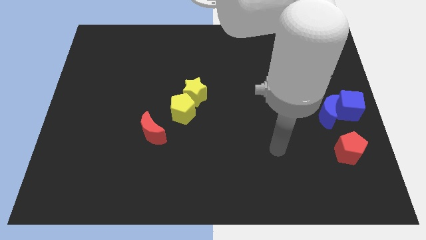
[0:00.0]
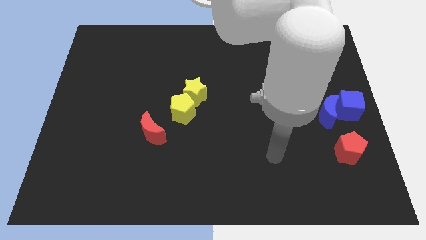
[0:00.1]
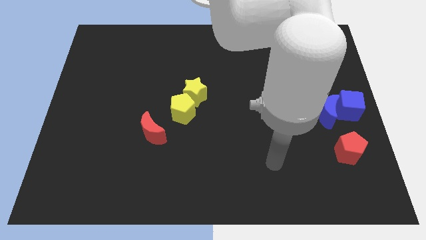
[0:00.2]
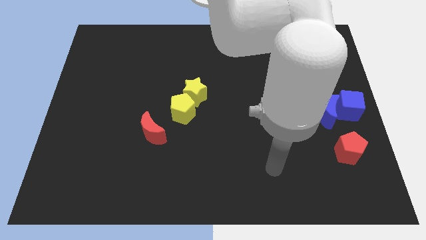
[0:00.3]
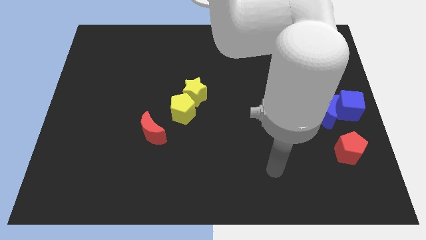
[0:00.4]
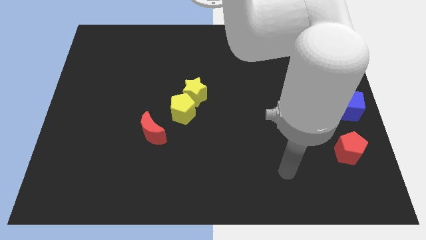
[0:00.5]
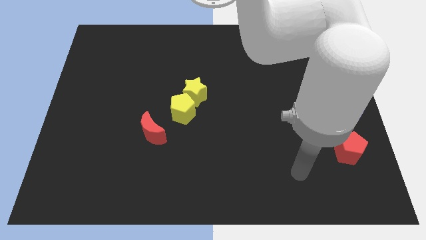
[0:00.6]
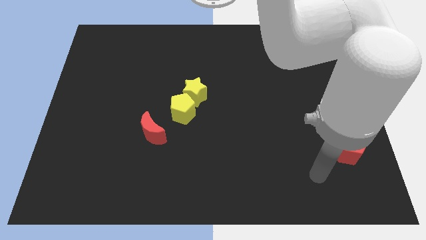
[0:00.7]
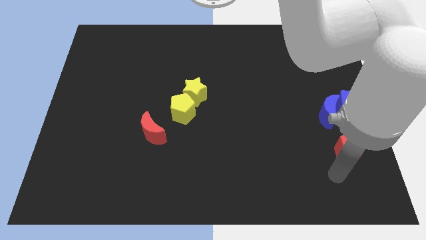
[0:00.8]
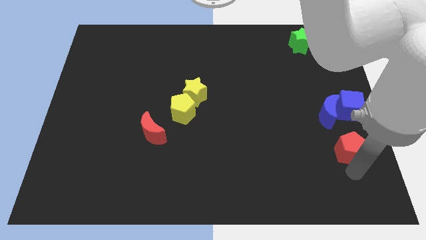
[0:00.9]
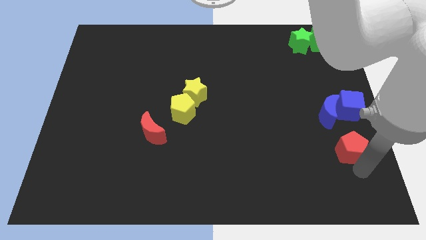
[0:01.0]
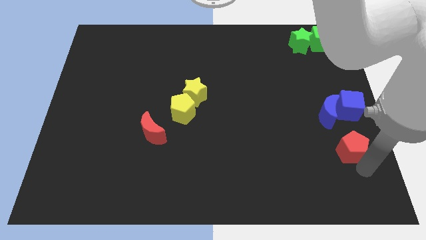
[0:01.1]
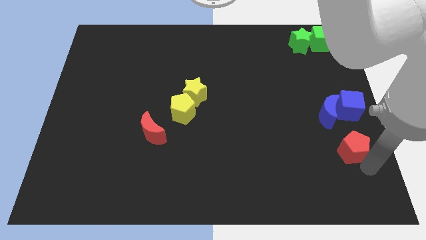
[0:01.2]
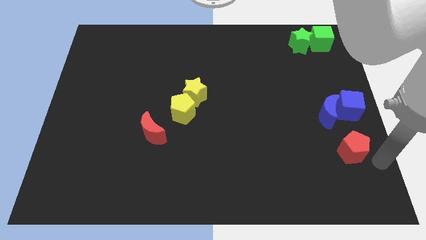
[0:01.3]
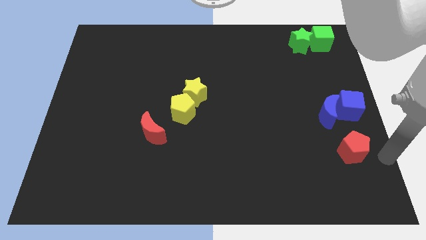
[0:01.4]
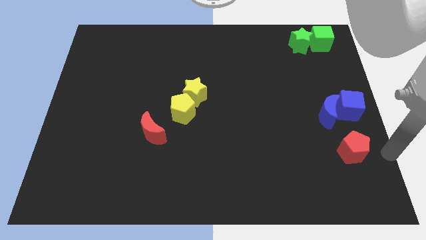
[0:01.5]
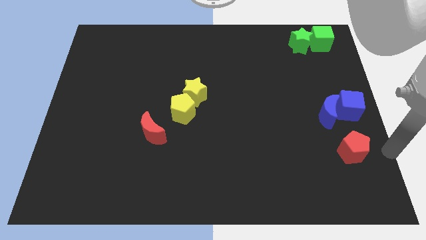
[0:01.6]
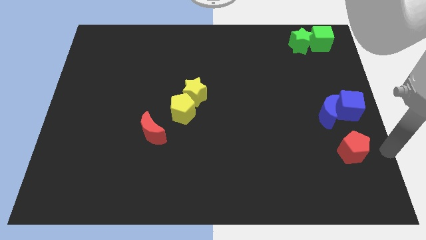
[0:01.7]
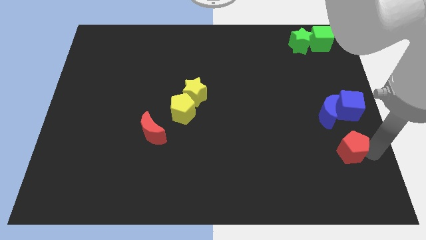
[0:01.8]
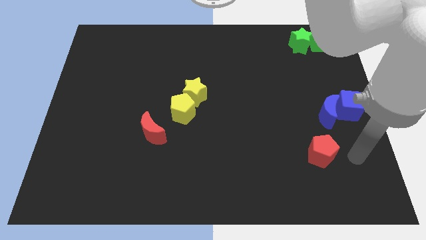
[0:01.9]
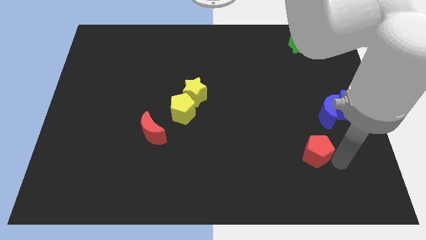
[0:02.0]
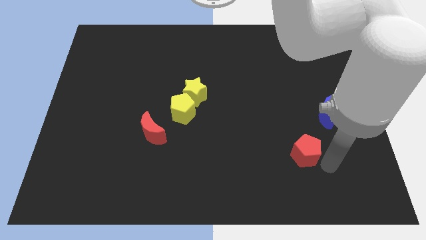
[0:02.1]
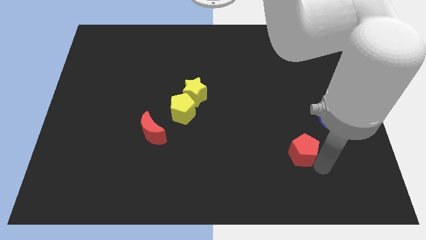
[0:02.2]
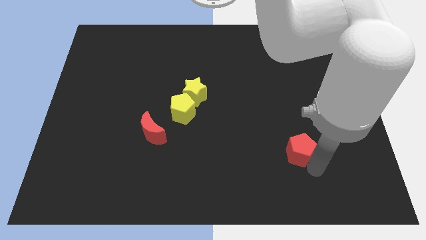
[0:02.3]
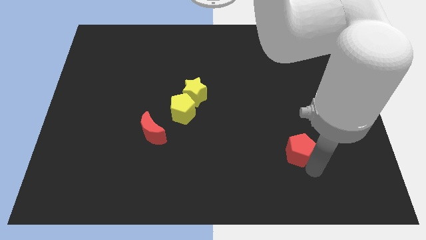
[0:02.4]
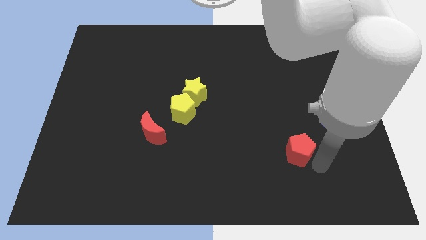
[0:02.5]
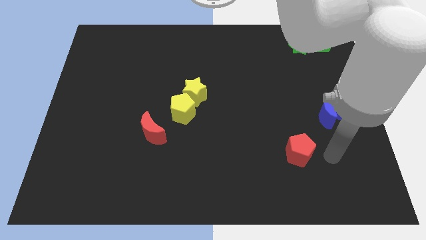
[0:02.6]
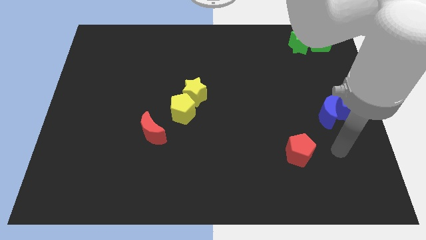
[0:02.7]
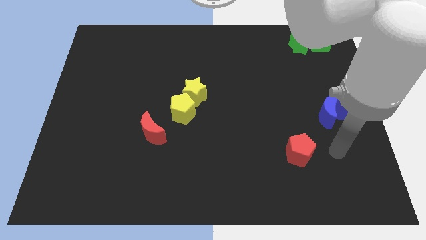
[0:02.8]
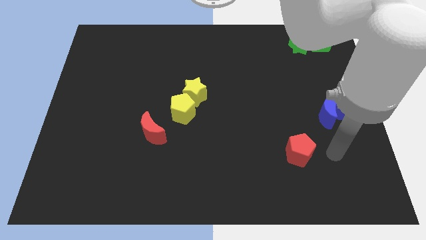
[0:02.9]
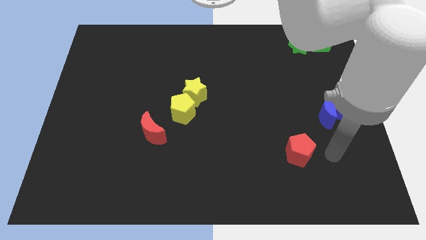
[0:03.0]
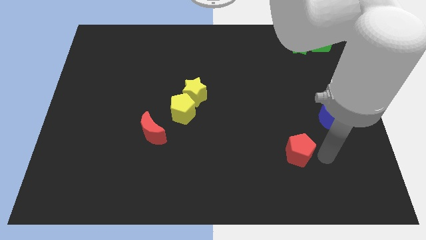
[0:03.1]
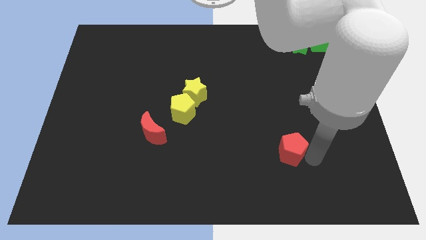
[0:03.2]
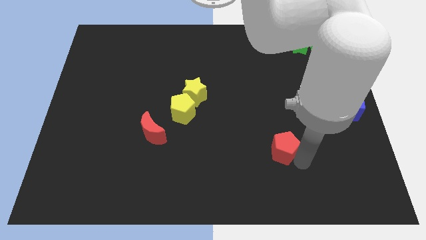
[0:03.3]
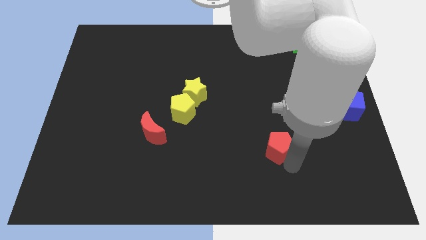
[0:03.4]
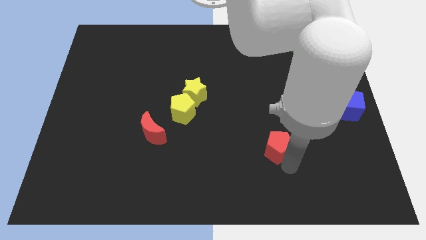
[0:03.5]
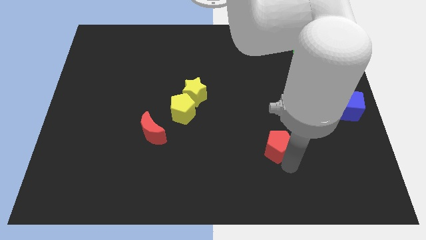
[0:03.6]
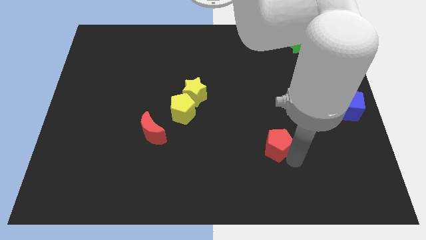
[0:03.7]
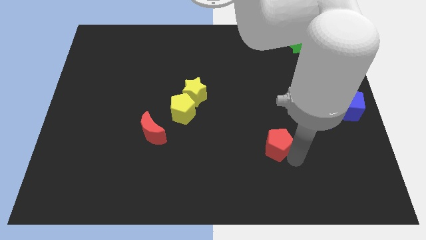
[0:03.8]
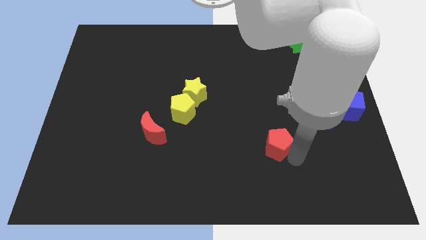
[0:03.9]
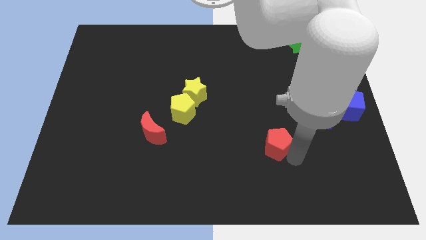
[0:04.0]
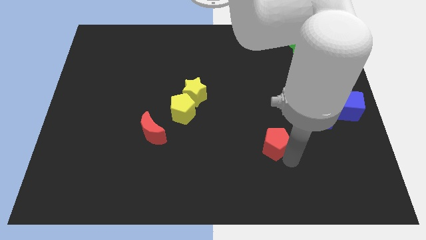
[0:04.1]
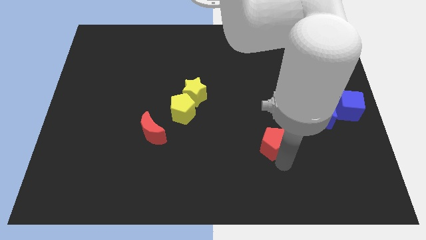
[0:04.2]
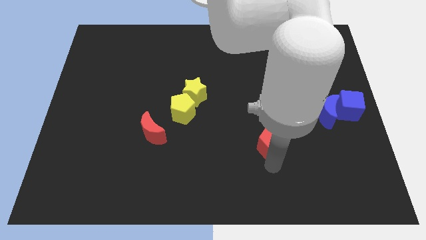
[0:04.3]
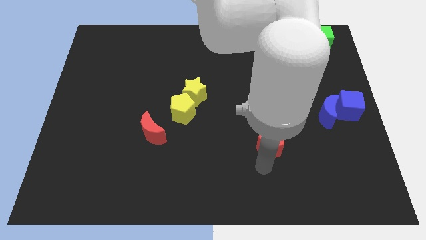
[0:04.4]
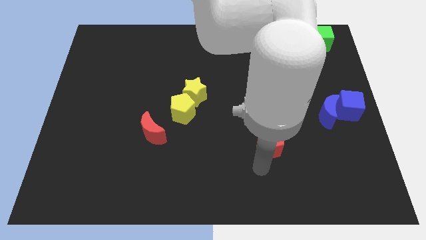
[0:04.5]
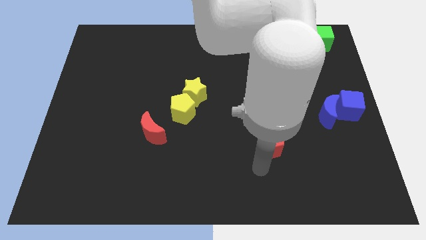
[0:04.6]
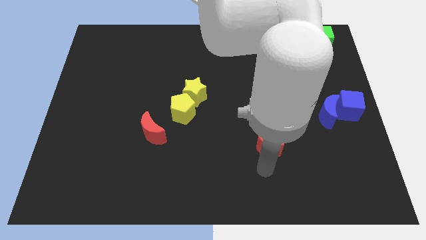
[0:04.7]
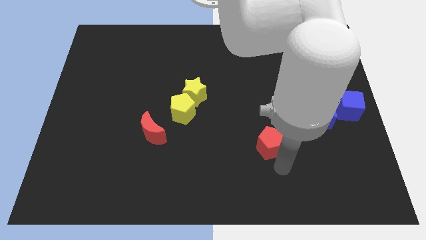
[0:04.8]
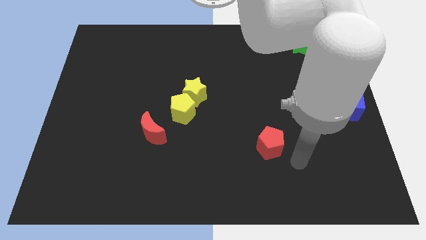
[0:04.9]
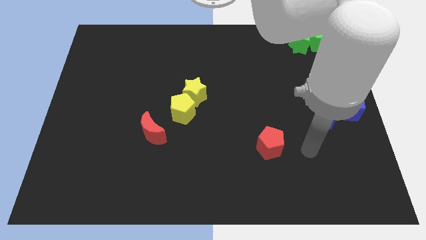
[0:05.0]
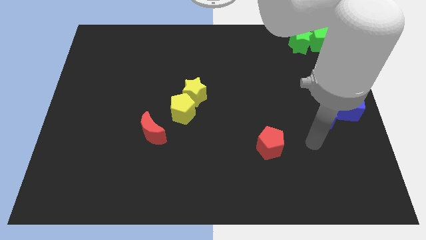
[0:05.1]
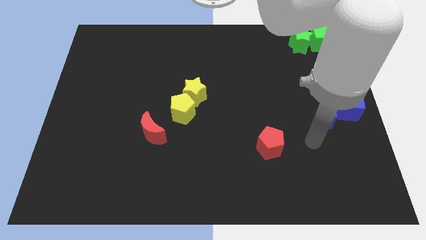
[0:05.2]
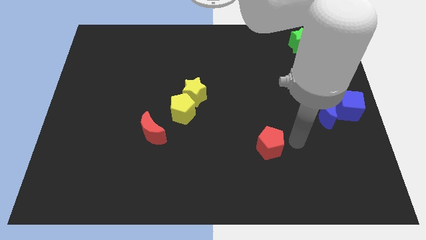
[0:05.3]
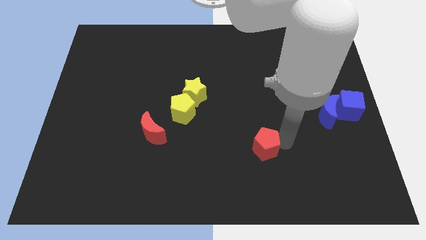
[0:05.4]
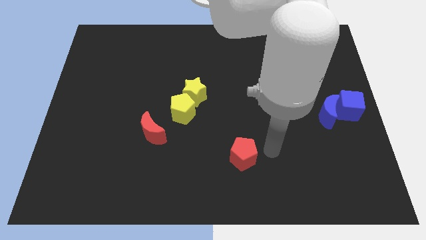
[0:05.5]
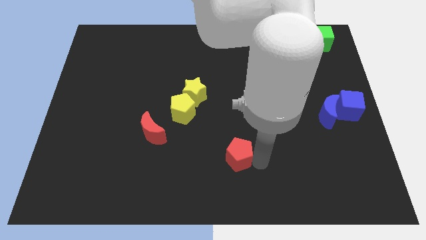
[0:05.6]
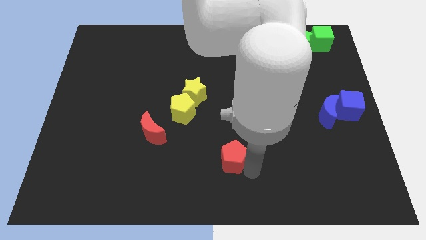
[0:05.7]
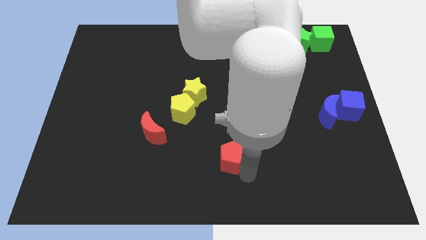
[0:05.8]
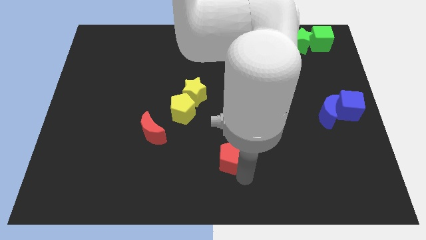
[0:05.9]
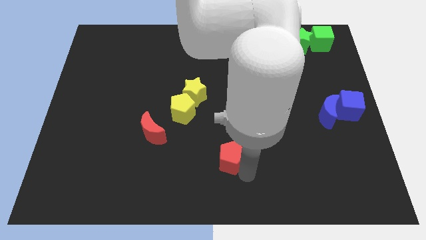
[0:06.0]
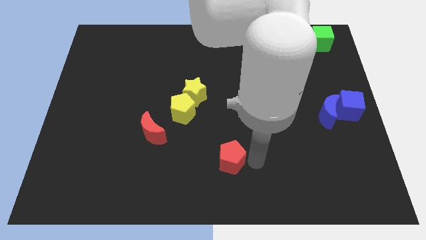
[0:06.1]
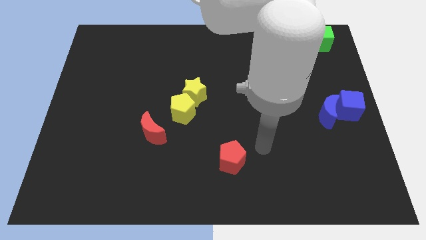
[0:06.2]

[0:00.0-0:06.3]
push the red pentagon to the left of the board

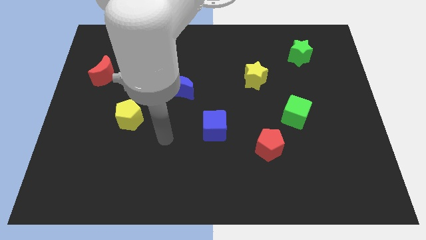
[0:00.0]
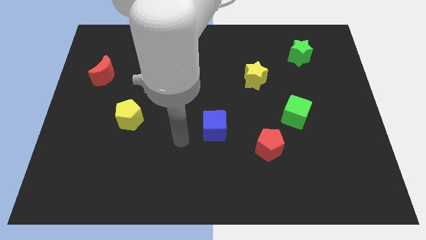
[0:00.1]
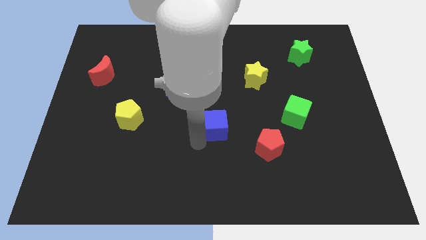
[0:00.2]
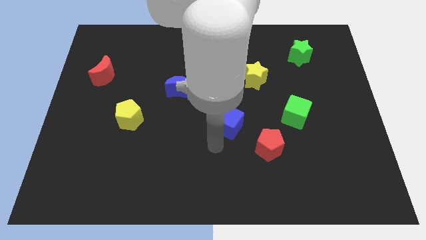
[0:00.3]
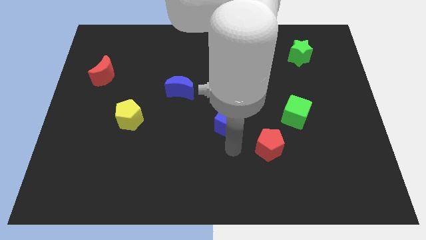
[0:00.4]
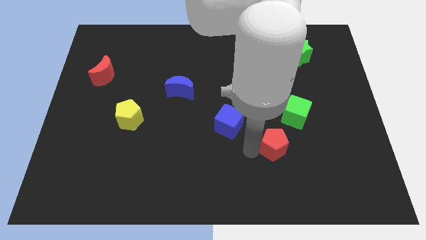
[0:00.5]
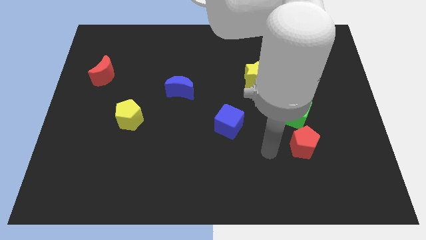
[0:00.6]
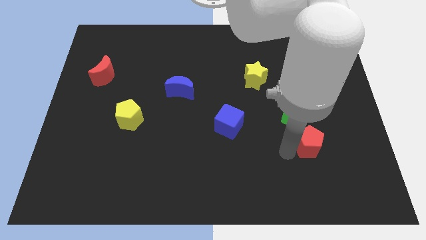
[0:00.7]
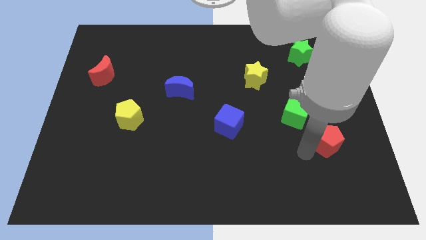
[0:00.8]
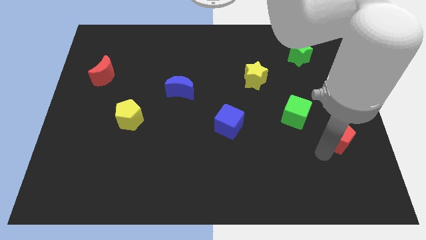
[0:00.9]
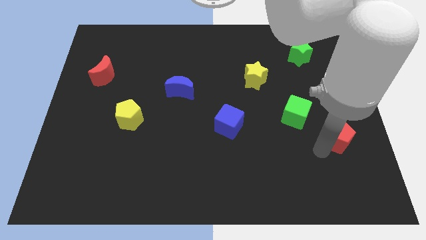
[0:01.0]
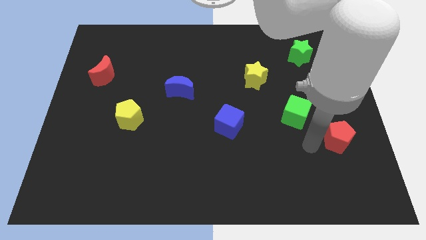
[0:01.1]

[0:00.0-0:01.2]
push the red pentagon to the right side of the board

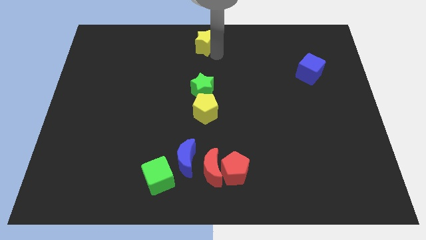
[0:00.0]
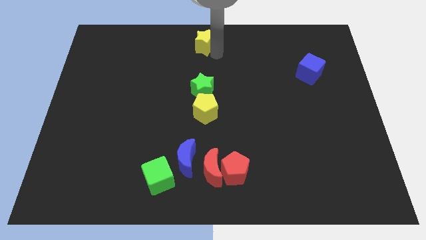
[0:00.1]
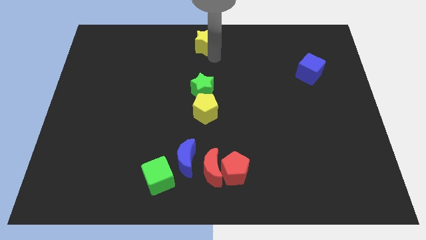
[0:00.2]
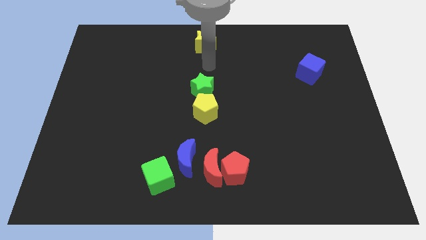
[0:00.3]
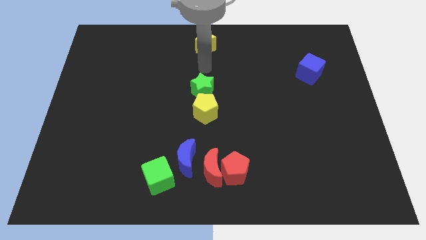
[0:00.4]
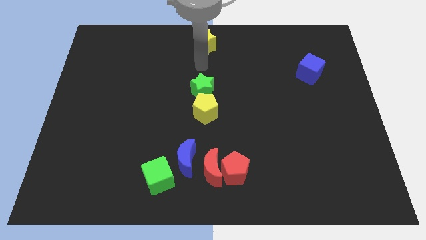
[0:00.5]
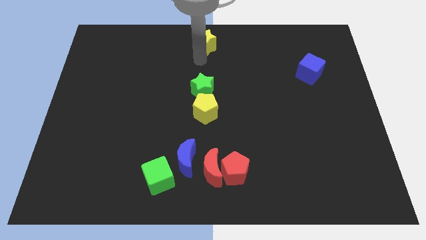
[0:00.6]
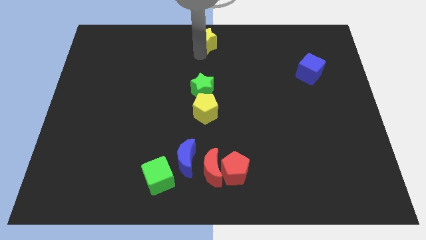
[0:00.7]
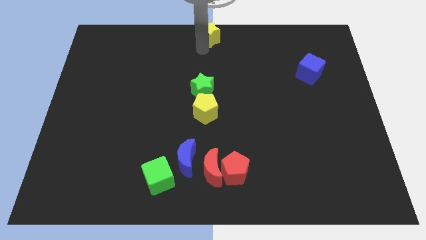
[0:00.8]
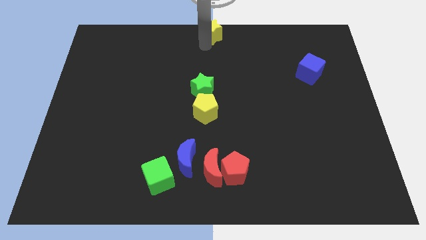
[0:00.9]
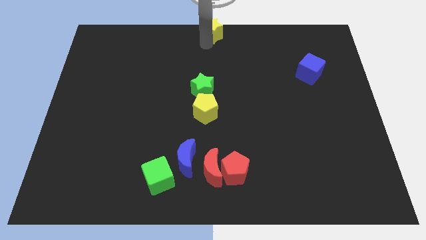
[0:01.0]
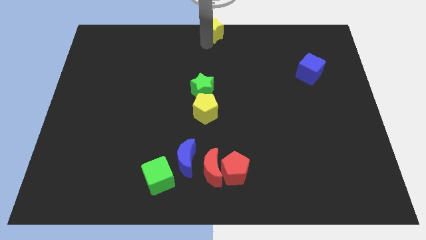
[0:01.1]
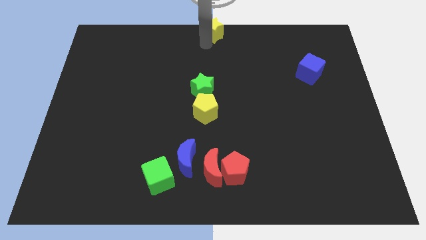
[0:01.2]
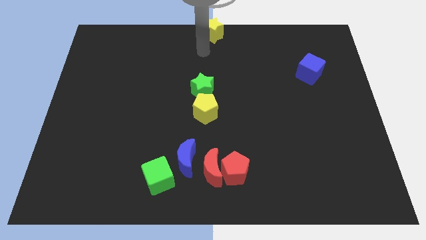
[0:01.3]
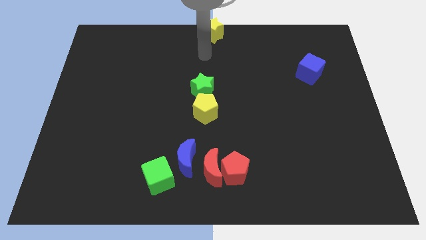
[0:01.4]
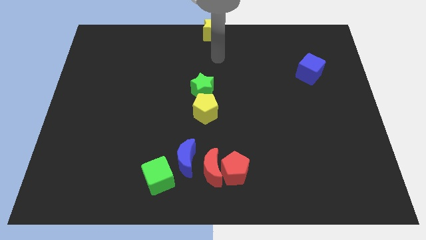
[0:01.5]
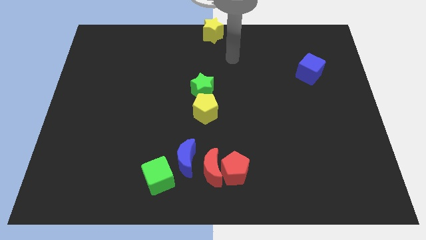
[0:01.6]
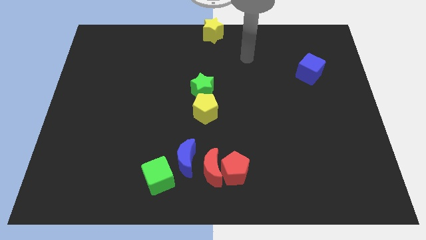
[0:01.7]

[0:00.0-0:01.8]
place the yellow pentagon at the top center of the board
